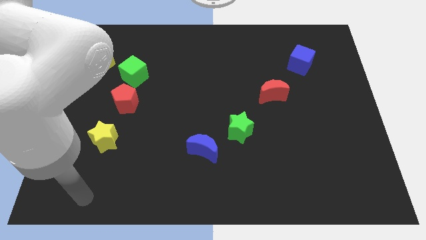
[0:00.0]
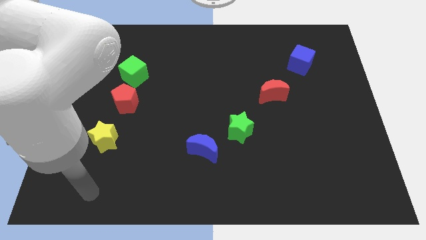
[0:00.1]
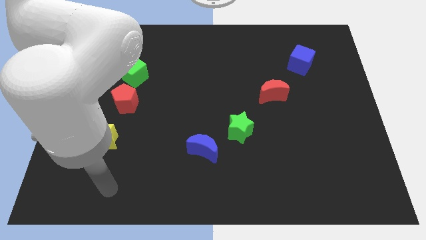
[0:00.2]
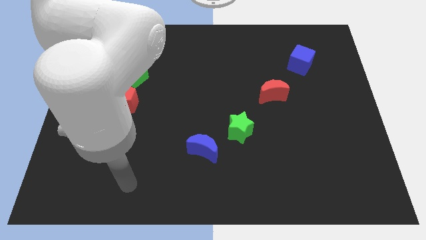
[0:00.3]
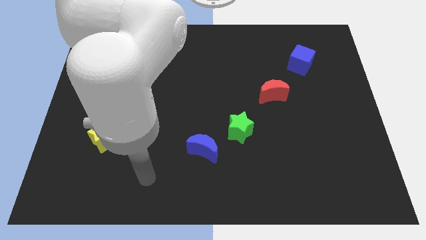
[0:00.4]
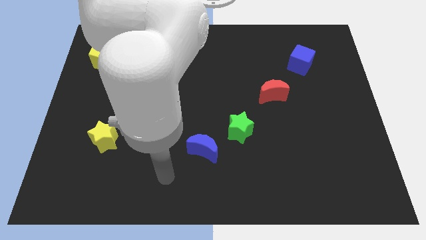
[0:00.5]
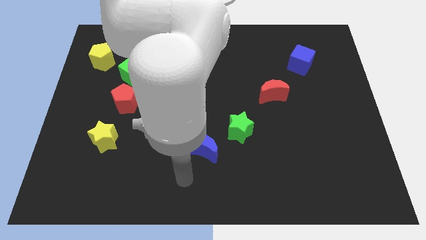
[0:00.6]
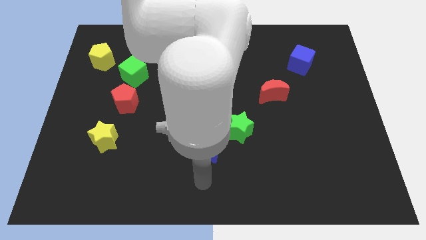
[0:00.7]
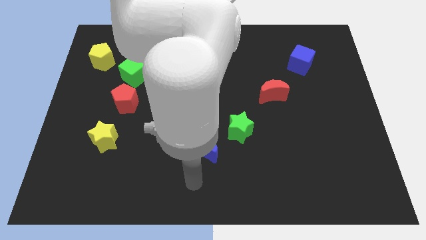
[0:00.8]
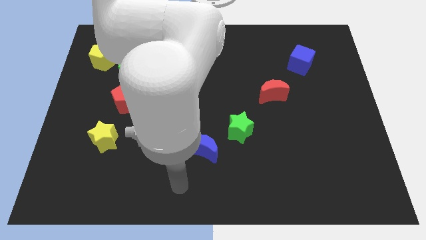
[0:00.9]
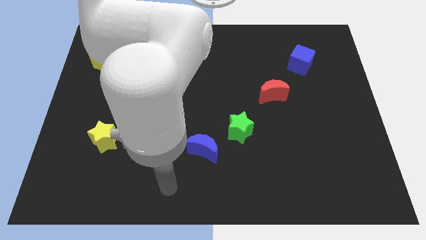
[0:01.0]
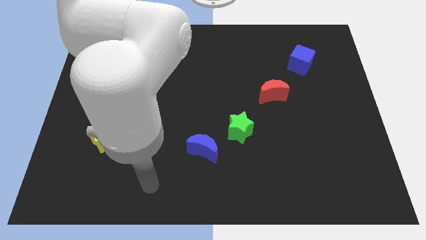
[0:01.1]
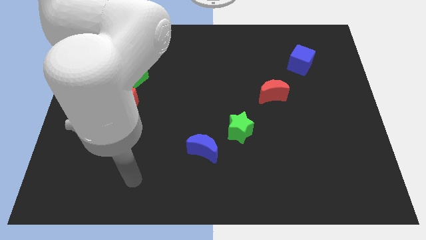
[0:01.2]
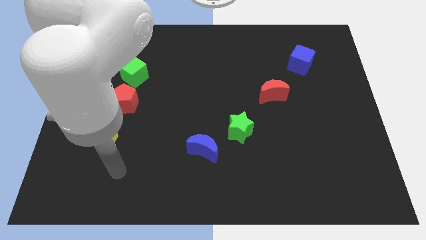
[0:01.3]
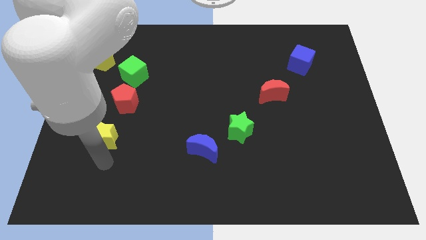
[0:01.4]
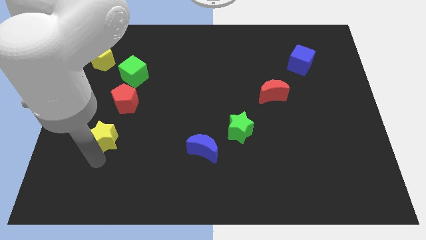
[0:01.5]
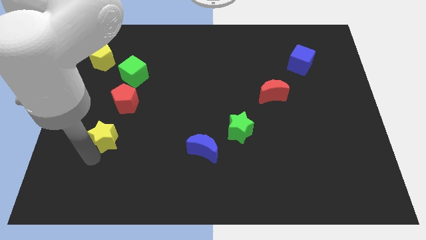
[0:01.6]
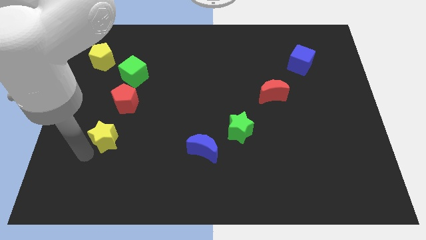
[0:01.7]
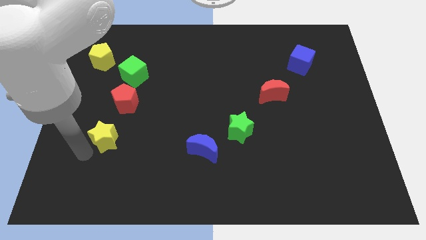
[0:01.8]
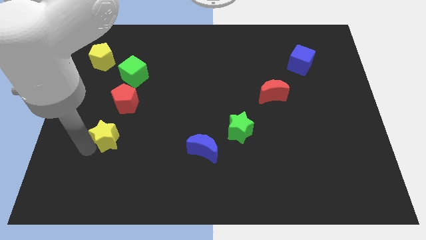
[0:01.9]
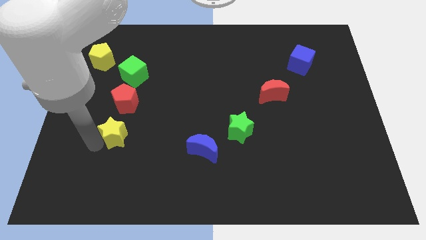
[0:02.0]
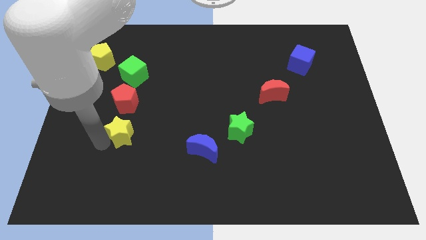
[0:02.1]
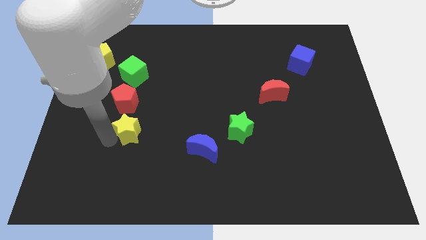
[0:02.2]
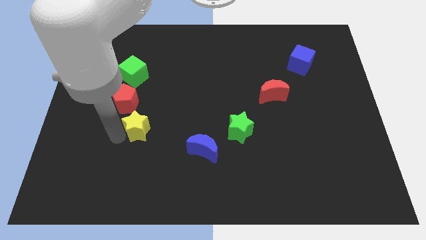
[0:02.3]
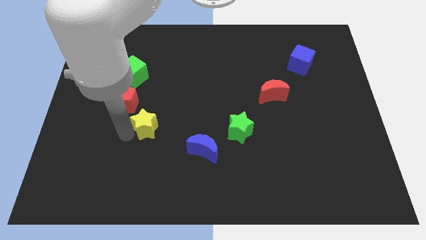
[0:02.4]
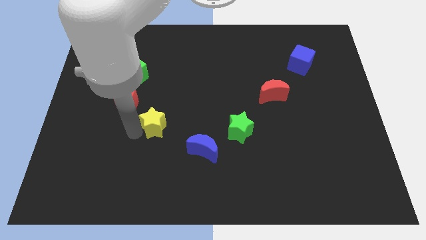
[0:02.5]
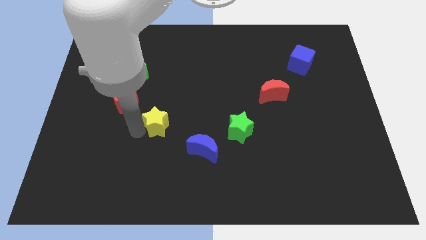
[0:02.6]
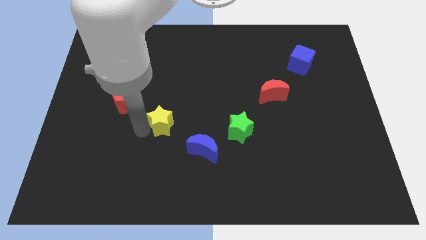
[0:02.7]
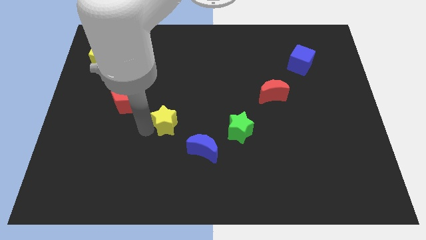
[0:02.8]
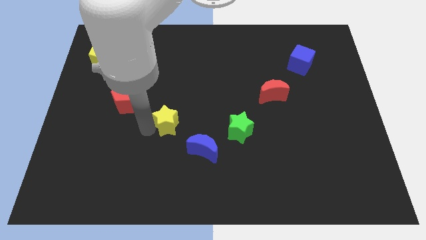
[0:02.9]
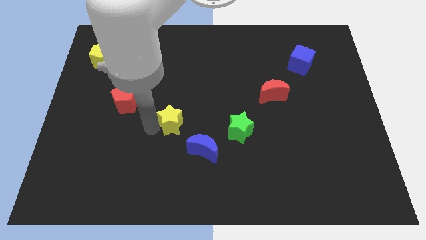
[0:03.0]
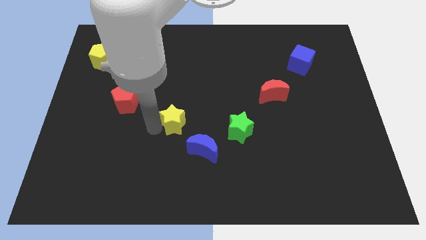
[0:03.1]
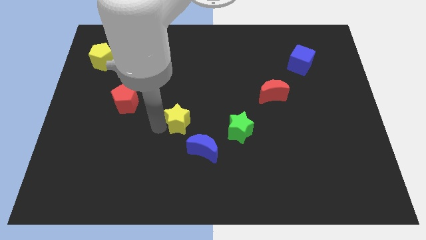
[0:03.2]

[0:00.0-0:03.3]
push yellow star above the blue crescent

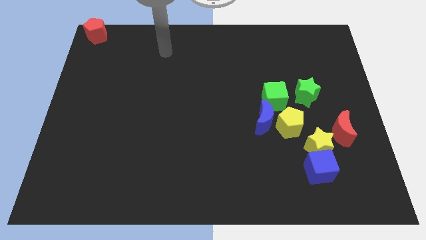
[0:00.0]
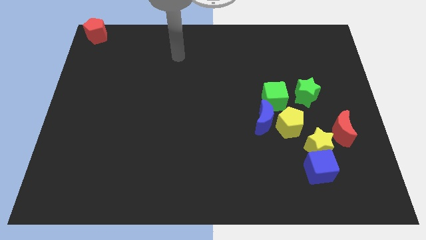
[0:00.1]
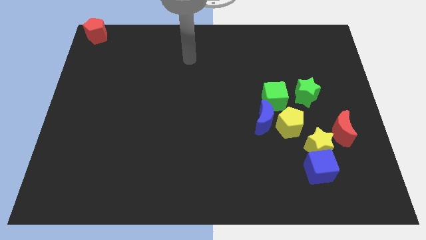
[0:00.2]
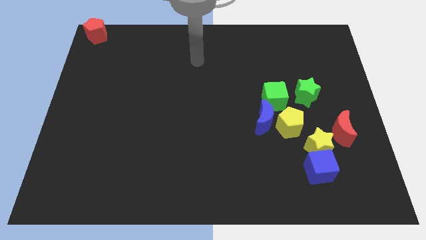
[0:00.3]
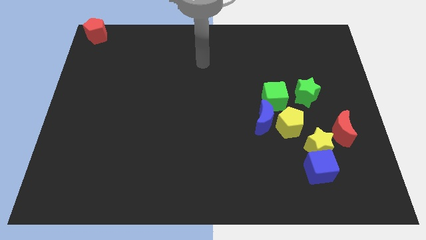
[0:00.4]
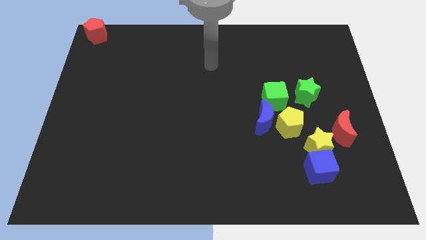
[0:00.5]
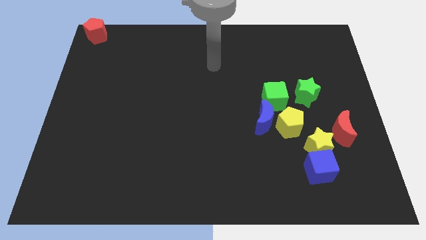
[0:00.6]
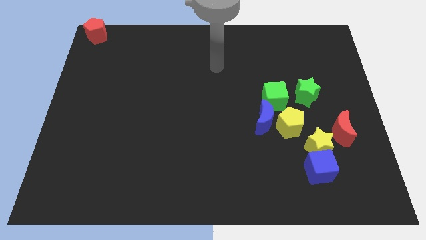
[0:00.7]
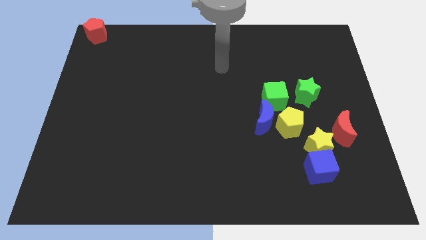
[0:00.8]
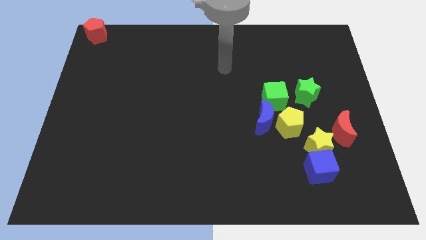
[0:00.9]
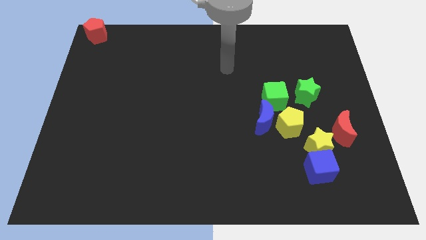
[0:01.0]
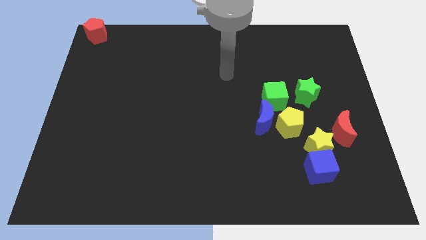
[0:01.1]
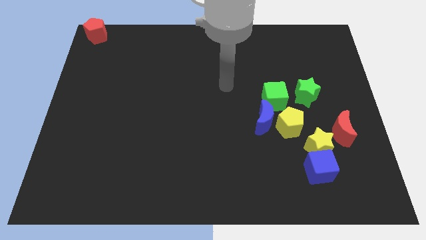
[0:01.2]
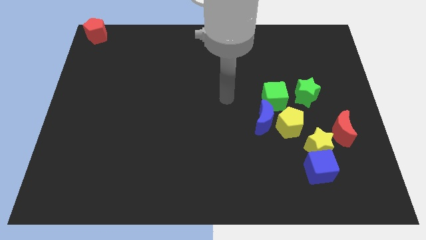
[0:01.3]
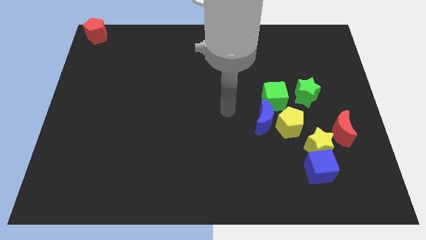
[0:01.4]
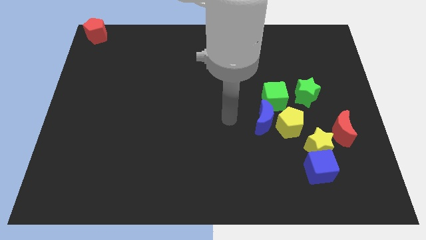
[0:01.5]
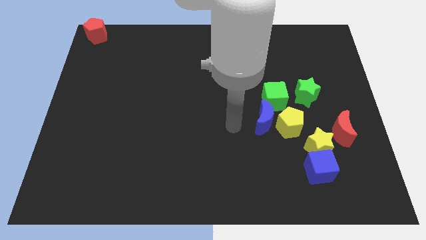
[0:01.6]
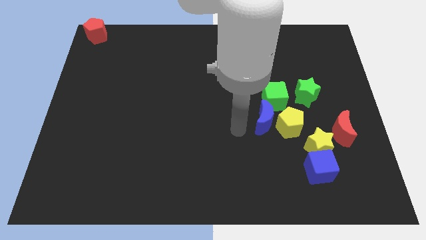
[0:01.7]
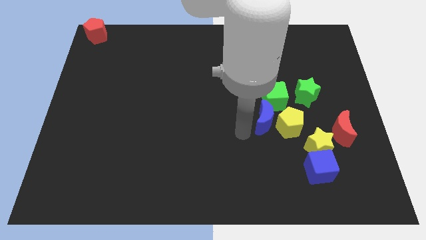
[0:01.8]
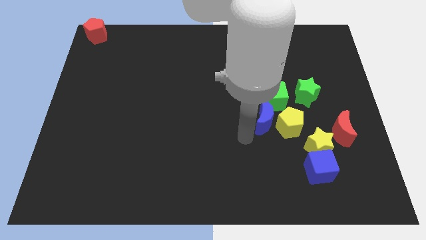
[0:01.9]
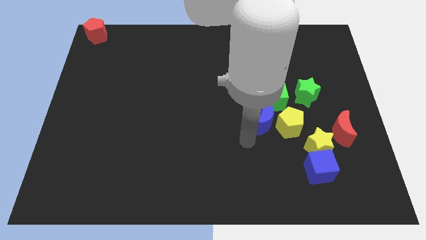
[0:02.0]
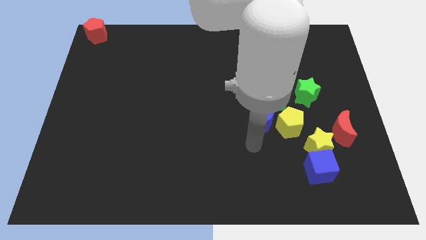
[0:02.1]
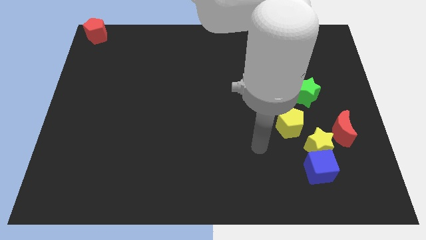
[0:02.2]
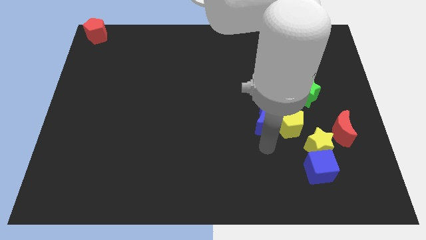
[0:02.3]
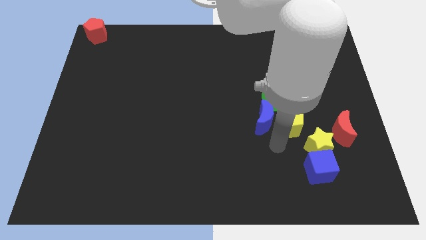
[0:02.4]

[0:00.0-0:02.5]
move the arm below the blue moon

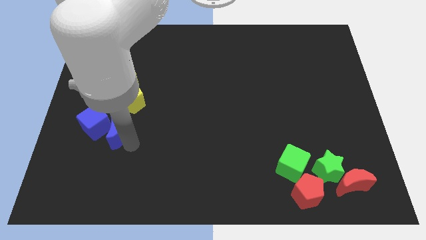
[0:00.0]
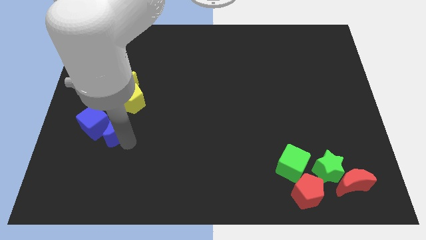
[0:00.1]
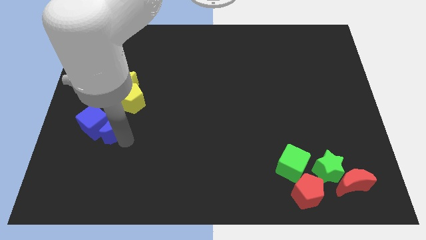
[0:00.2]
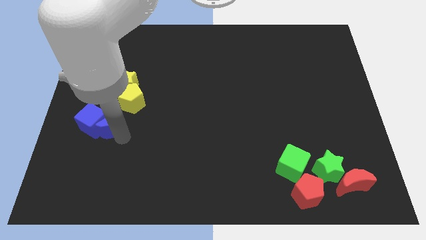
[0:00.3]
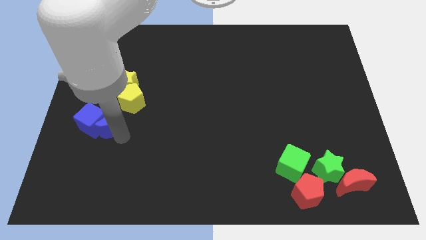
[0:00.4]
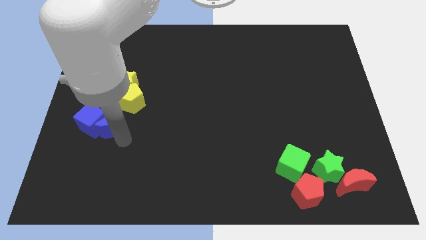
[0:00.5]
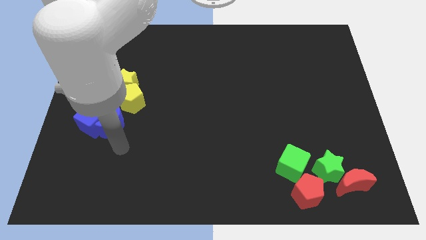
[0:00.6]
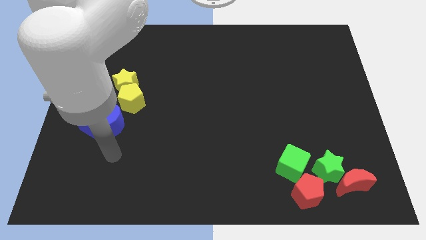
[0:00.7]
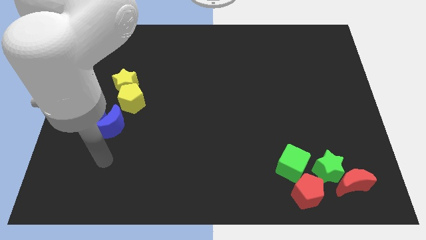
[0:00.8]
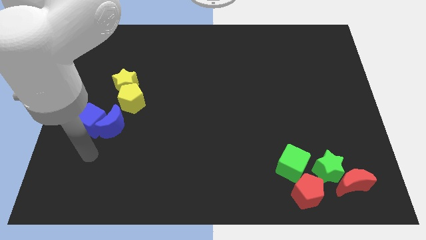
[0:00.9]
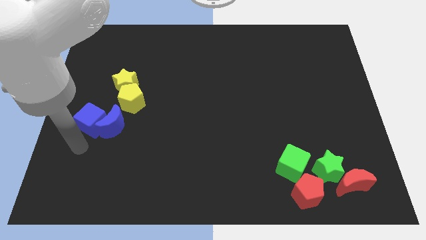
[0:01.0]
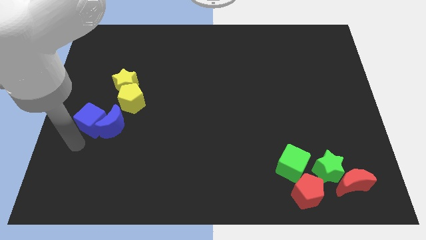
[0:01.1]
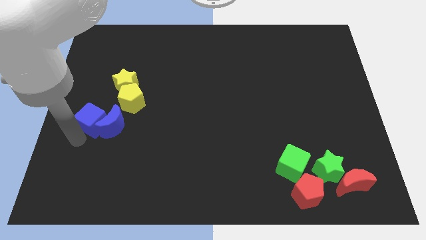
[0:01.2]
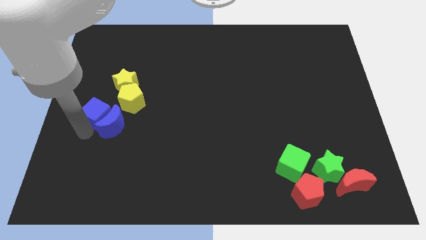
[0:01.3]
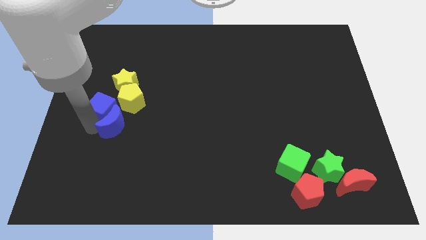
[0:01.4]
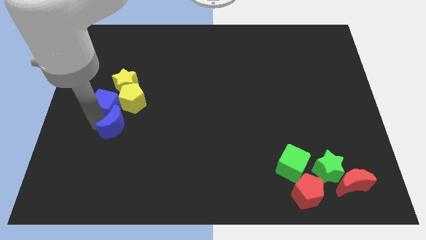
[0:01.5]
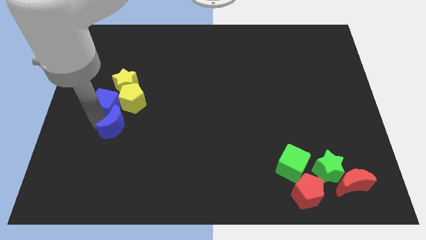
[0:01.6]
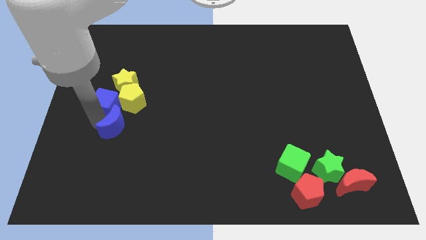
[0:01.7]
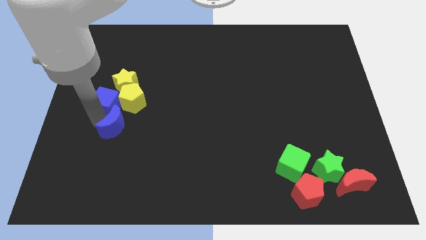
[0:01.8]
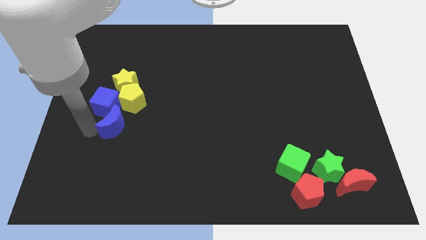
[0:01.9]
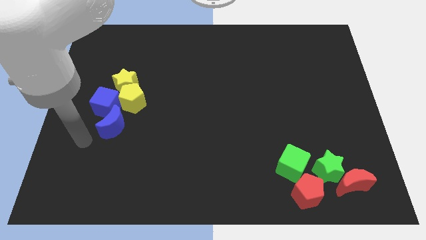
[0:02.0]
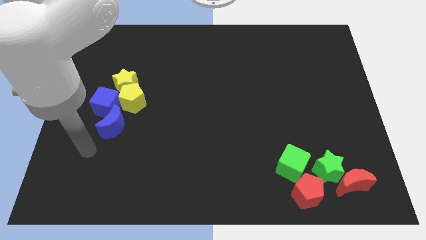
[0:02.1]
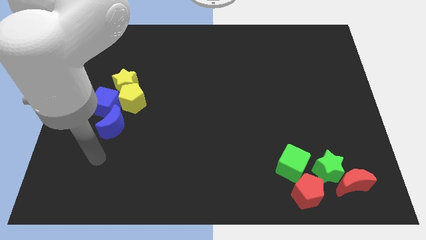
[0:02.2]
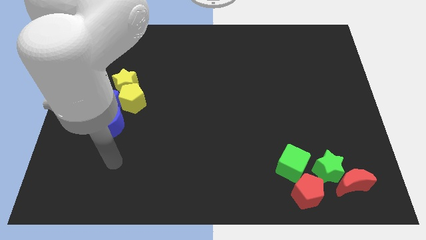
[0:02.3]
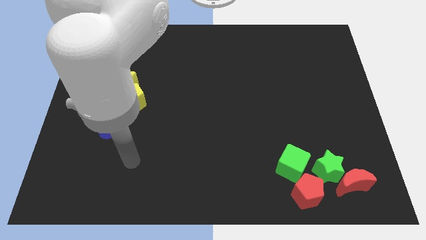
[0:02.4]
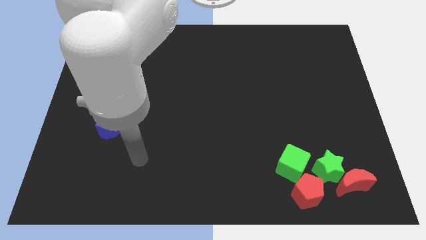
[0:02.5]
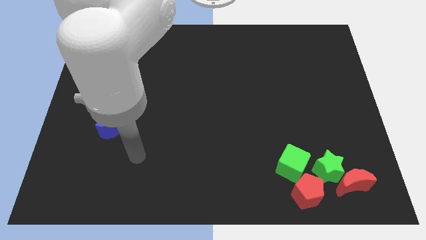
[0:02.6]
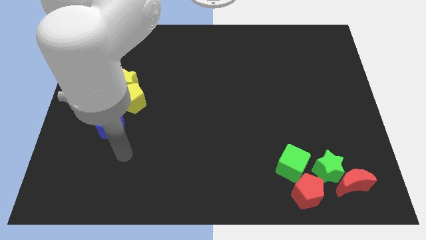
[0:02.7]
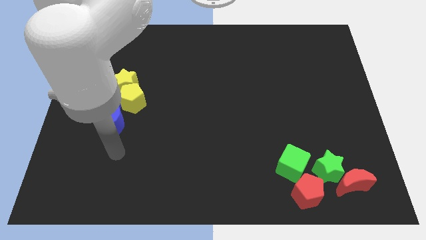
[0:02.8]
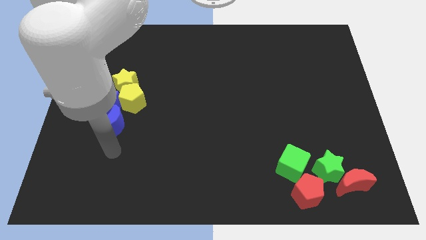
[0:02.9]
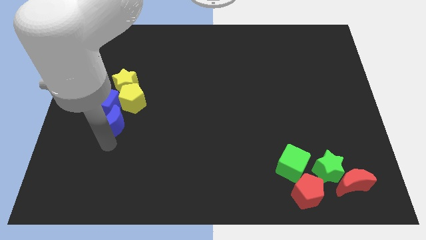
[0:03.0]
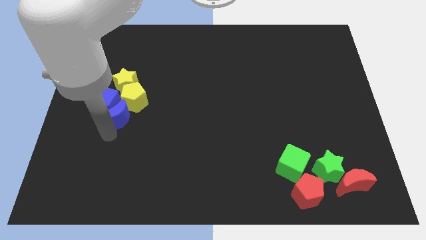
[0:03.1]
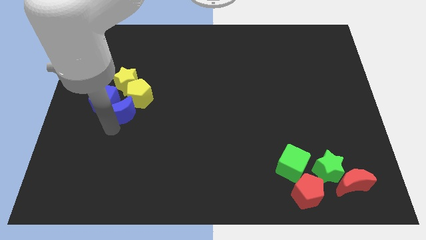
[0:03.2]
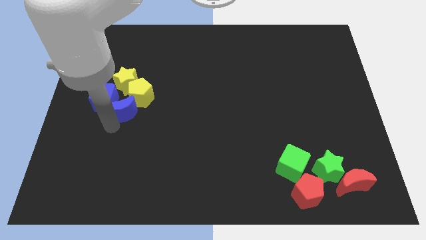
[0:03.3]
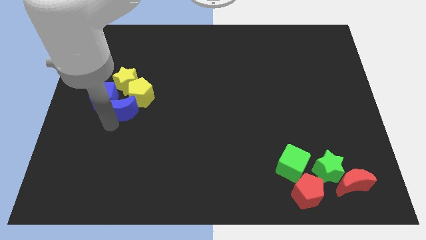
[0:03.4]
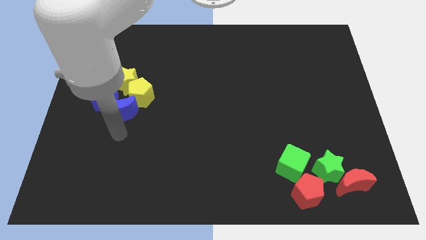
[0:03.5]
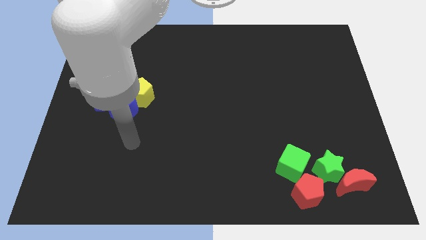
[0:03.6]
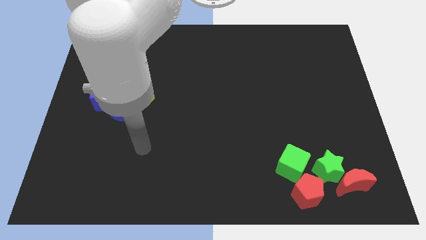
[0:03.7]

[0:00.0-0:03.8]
push the blue color blocks into the group of yellow blocks
